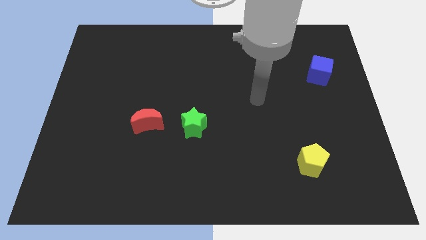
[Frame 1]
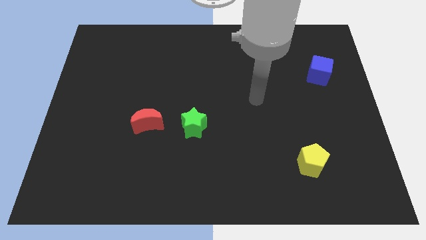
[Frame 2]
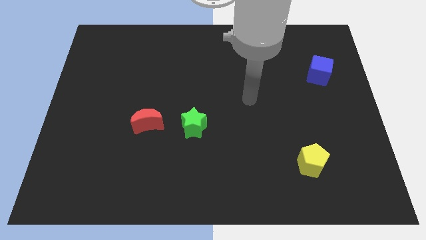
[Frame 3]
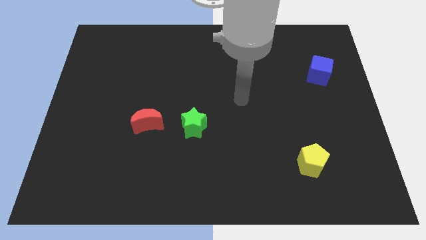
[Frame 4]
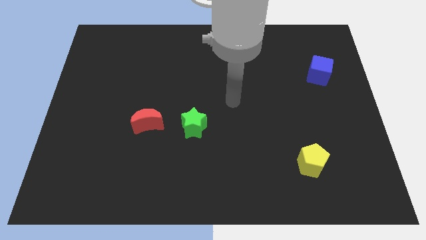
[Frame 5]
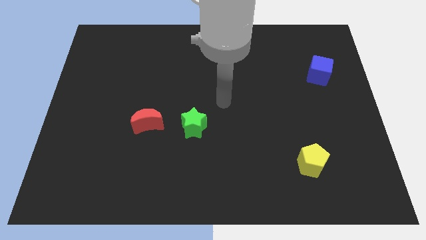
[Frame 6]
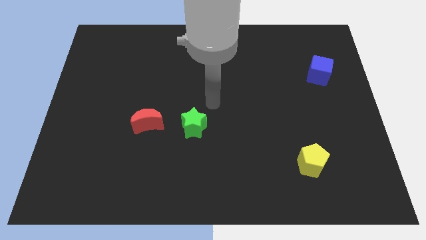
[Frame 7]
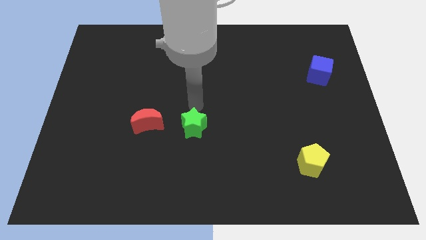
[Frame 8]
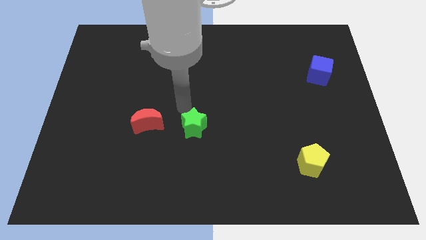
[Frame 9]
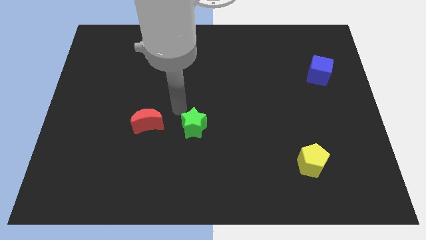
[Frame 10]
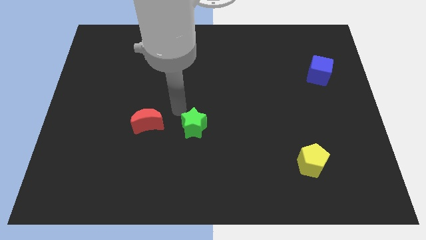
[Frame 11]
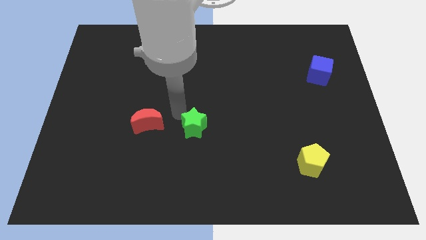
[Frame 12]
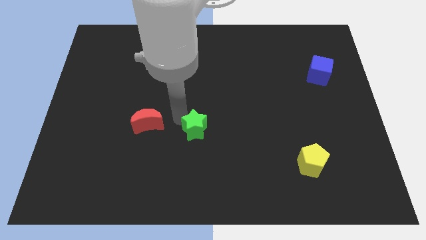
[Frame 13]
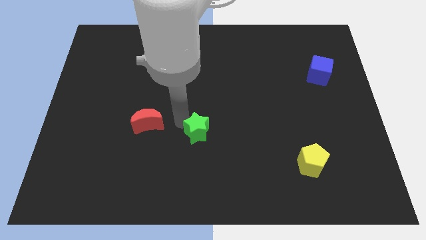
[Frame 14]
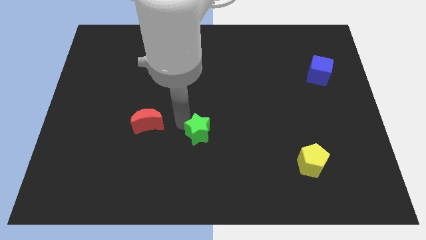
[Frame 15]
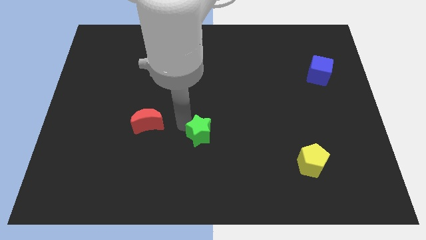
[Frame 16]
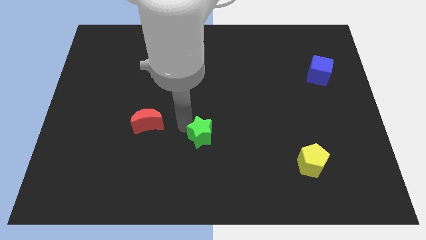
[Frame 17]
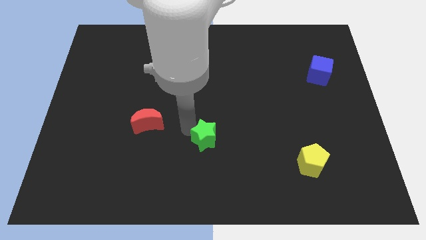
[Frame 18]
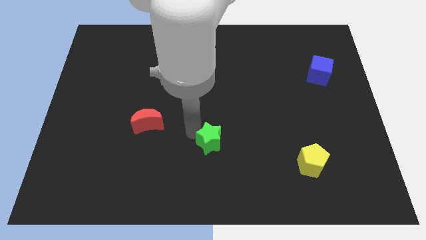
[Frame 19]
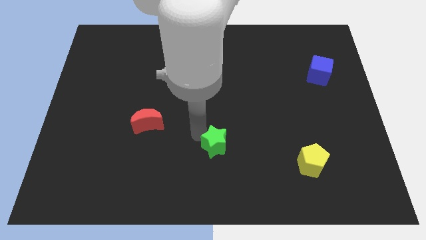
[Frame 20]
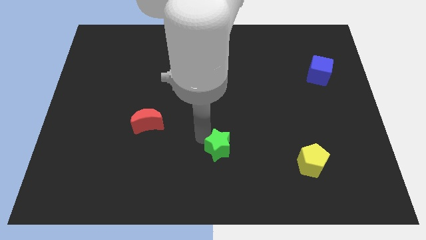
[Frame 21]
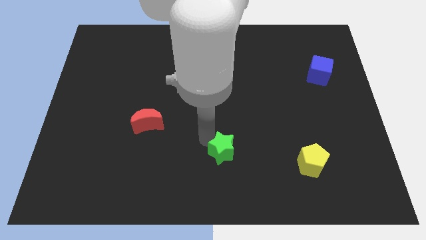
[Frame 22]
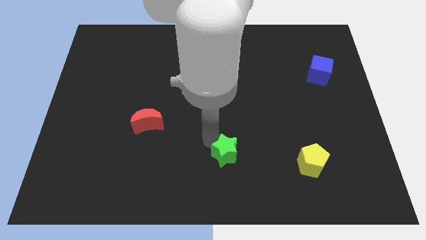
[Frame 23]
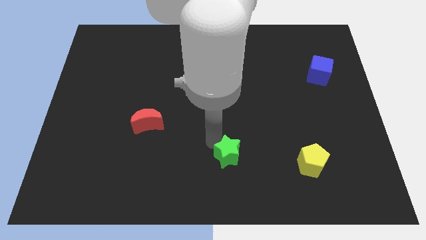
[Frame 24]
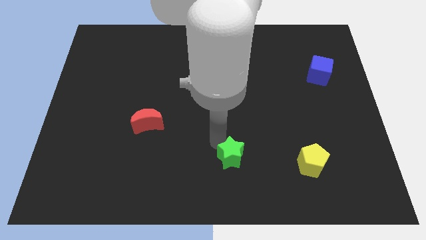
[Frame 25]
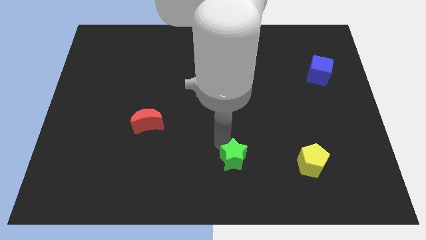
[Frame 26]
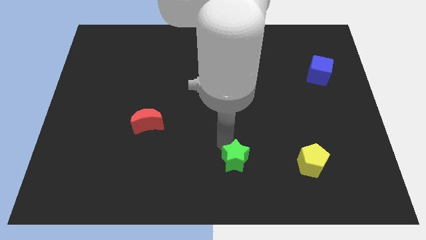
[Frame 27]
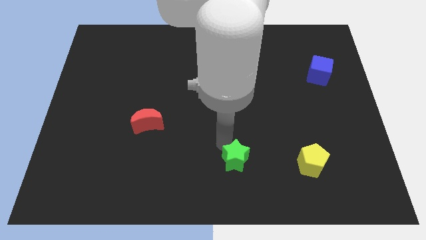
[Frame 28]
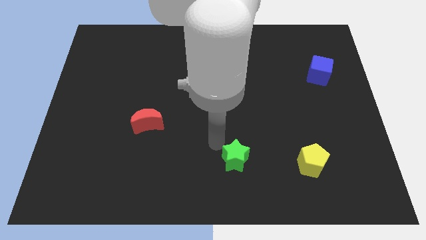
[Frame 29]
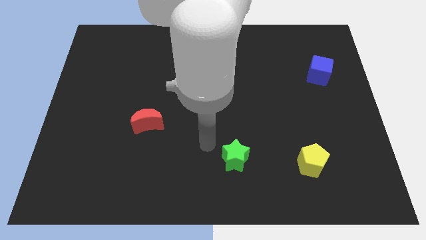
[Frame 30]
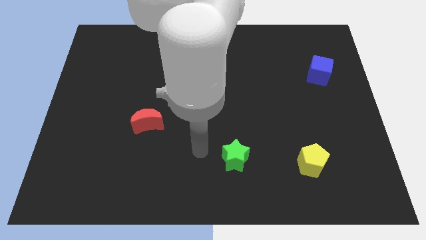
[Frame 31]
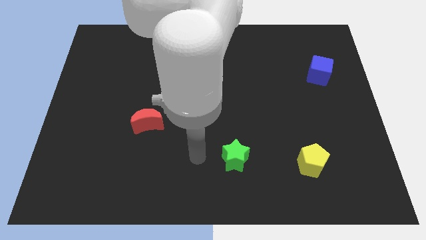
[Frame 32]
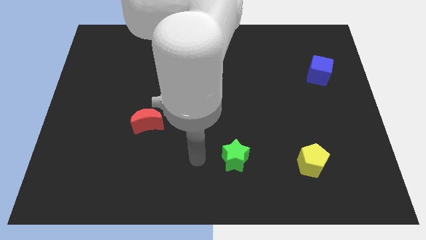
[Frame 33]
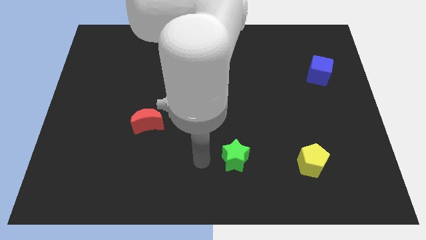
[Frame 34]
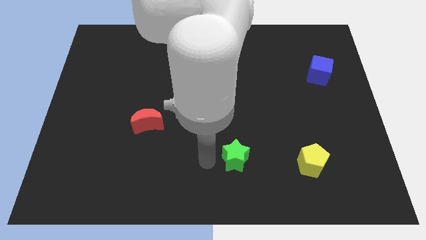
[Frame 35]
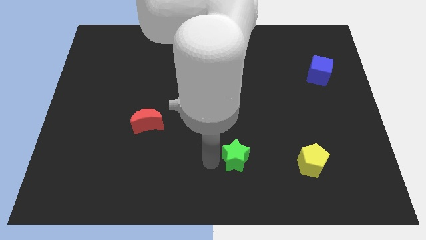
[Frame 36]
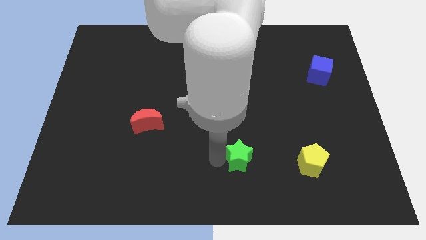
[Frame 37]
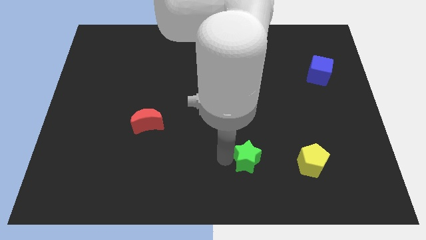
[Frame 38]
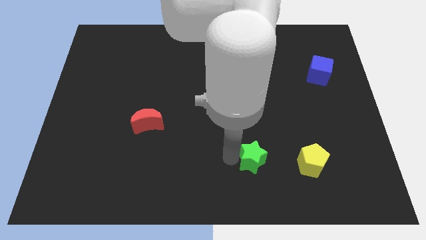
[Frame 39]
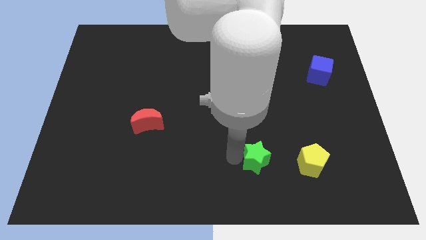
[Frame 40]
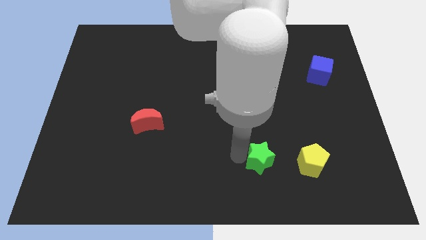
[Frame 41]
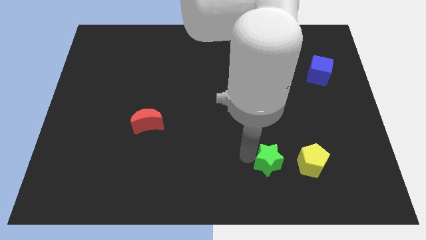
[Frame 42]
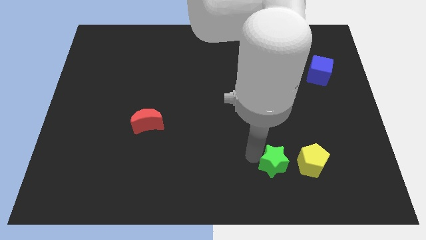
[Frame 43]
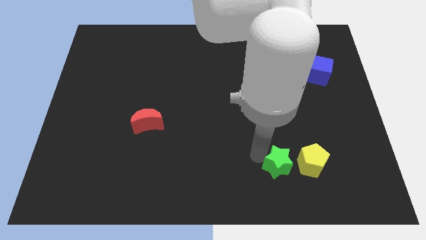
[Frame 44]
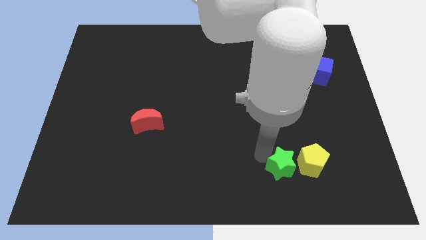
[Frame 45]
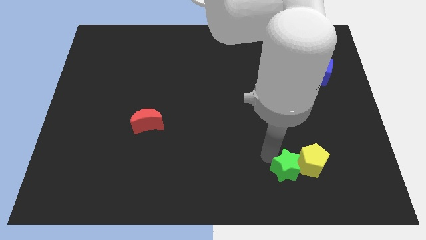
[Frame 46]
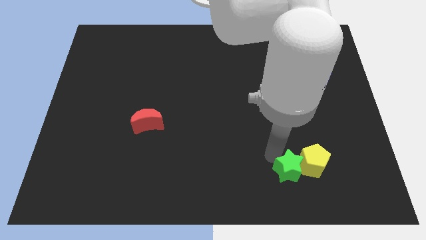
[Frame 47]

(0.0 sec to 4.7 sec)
slide the star to the yellow block

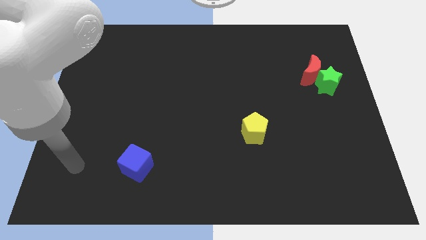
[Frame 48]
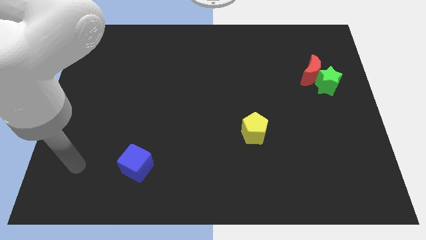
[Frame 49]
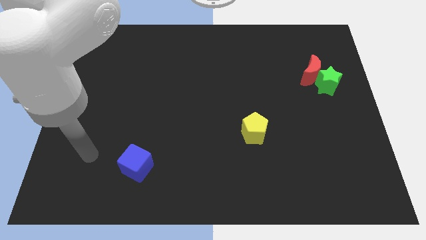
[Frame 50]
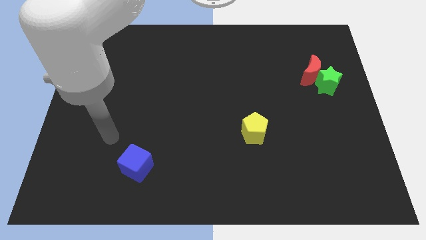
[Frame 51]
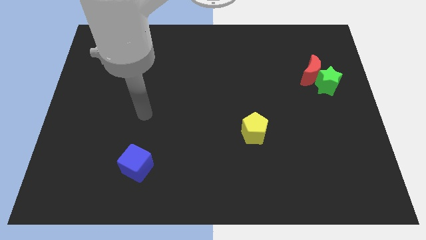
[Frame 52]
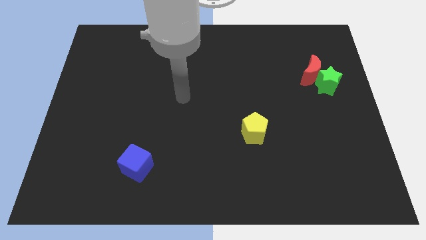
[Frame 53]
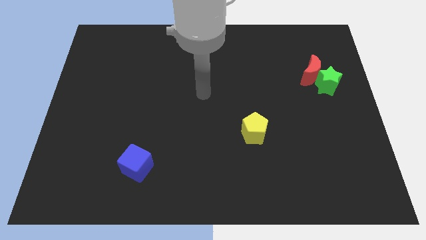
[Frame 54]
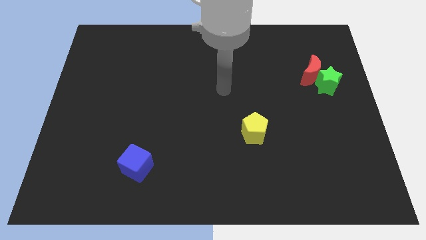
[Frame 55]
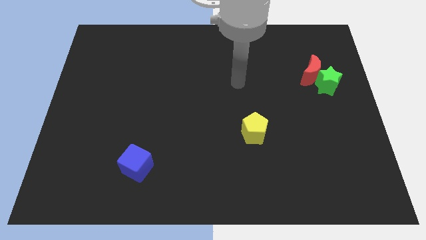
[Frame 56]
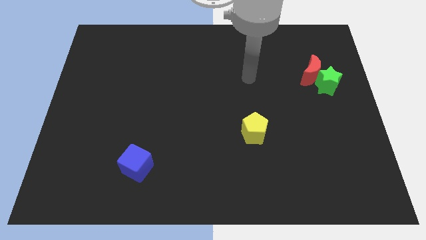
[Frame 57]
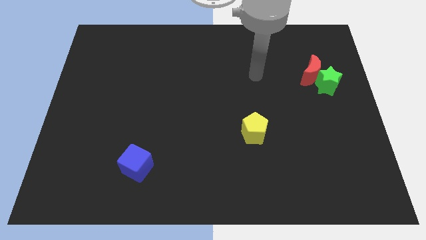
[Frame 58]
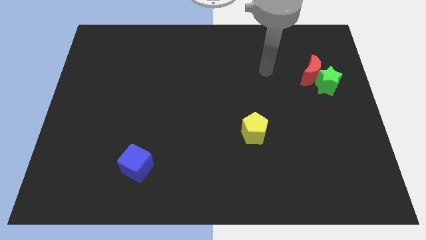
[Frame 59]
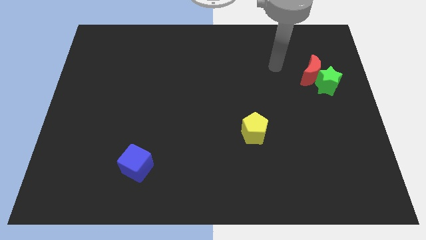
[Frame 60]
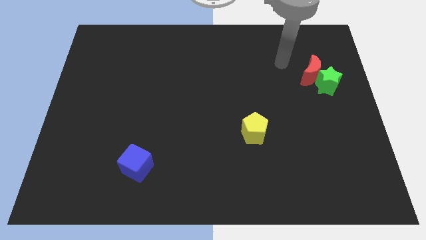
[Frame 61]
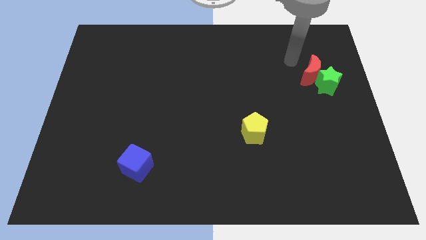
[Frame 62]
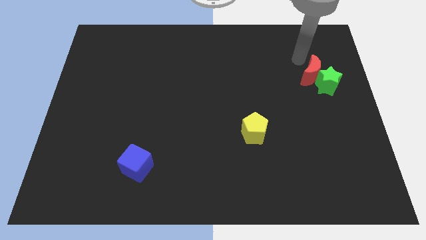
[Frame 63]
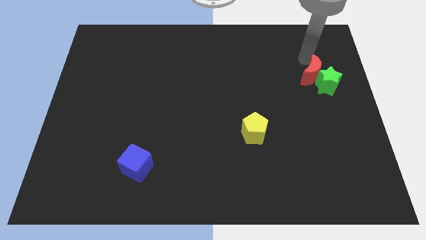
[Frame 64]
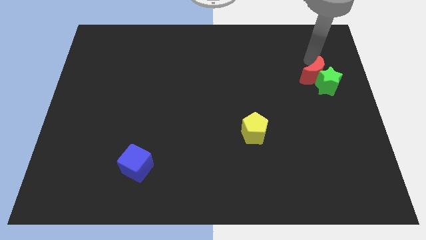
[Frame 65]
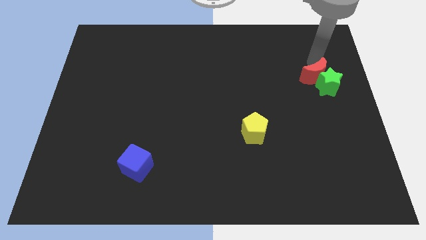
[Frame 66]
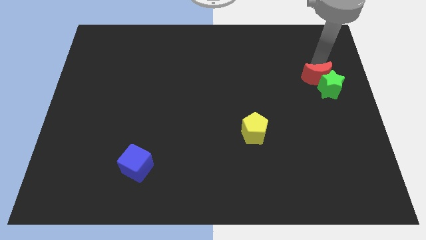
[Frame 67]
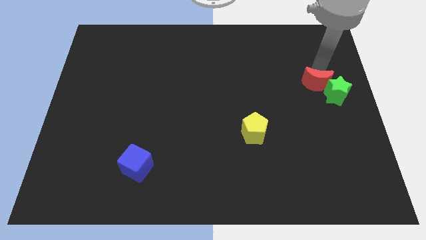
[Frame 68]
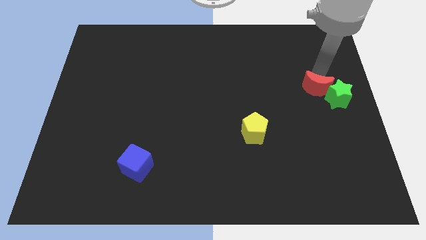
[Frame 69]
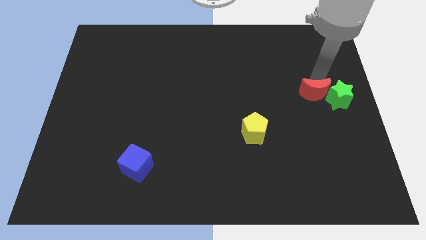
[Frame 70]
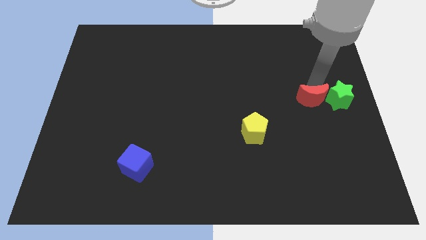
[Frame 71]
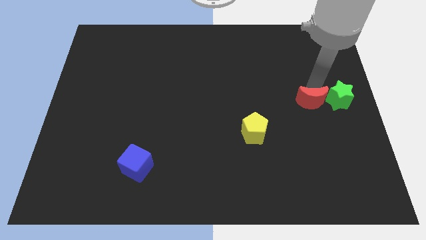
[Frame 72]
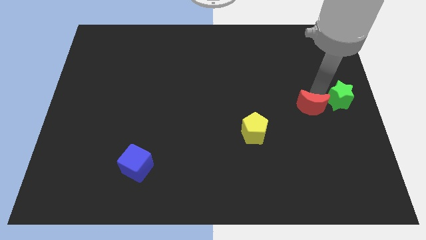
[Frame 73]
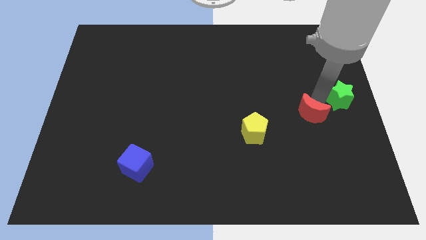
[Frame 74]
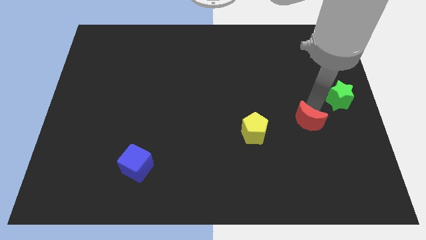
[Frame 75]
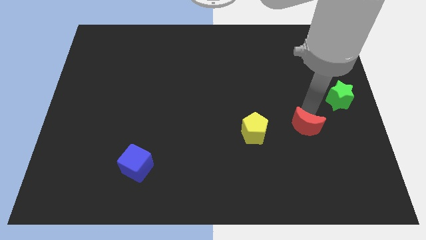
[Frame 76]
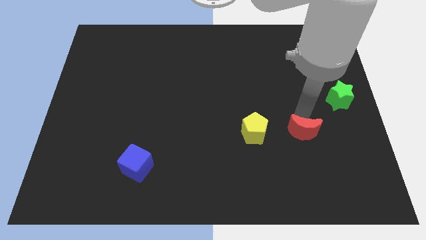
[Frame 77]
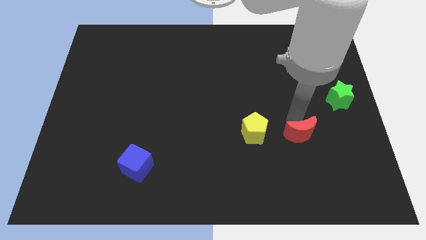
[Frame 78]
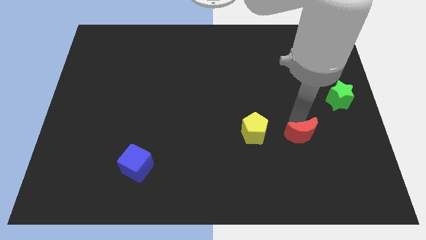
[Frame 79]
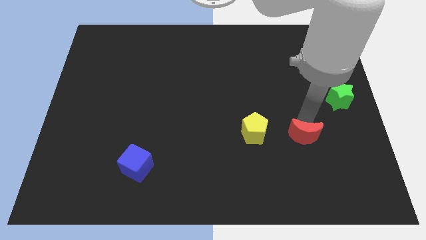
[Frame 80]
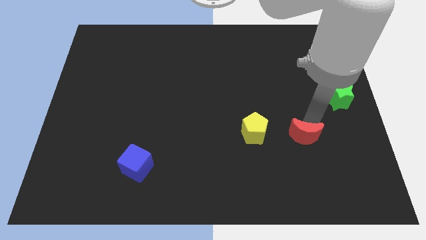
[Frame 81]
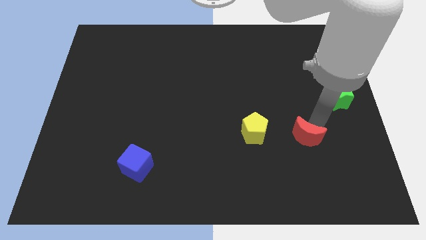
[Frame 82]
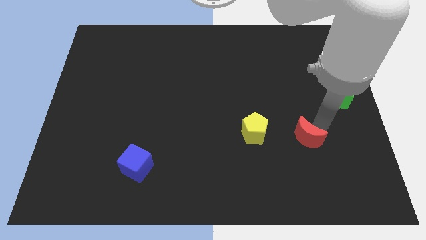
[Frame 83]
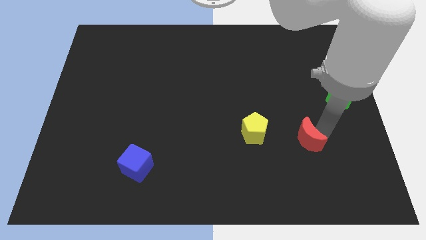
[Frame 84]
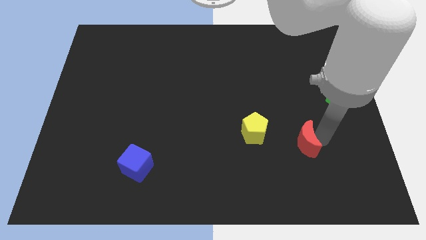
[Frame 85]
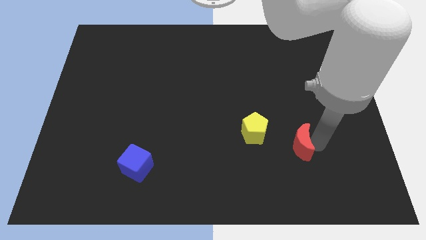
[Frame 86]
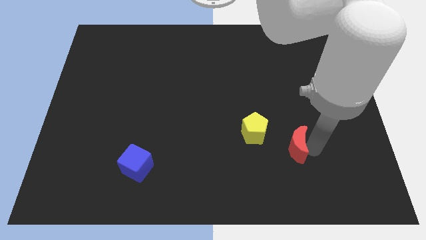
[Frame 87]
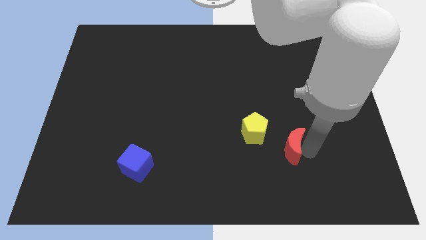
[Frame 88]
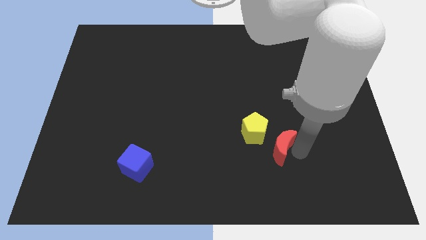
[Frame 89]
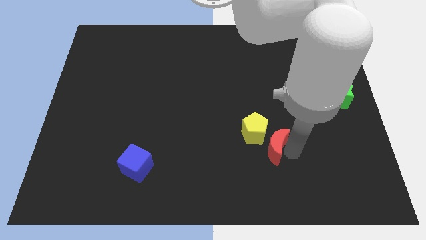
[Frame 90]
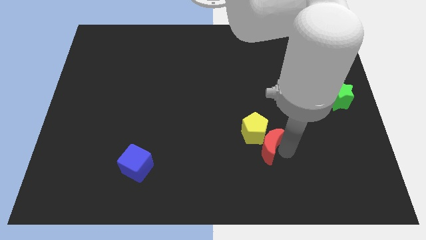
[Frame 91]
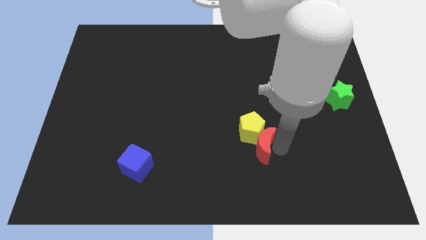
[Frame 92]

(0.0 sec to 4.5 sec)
put the moon to the yellow block
